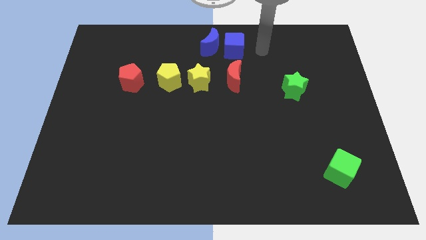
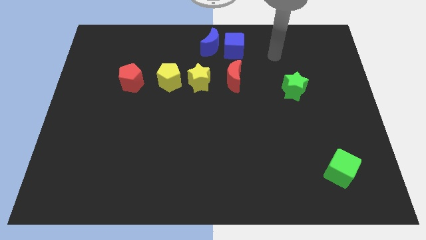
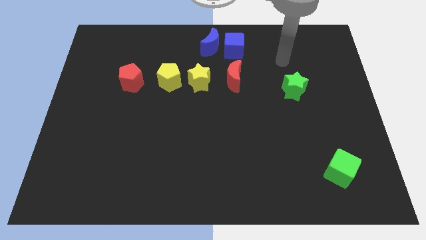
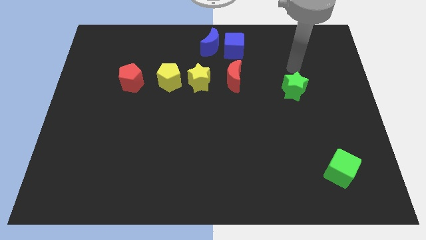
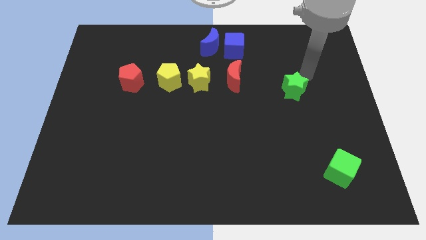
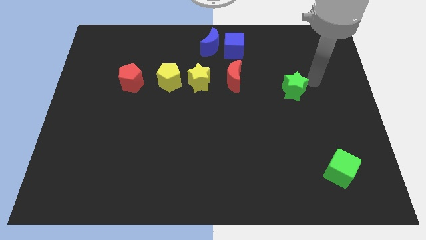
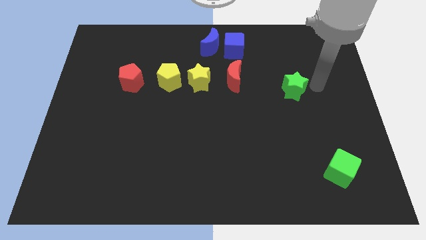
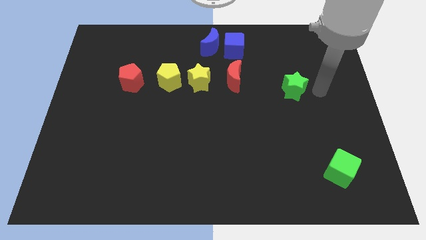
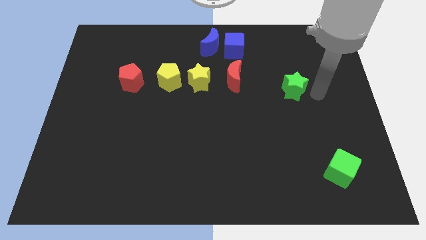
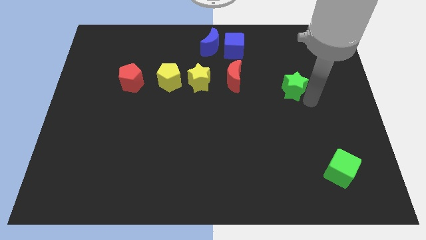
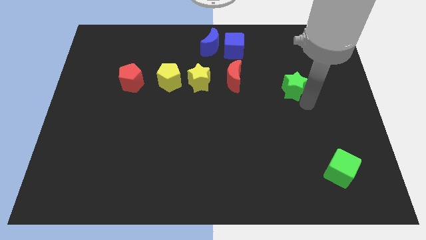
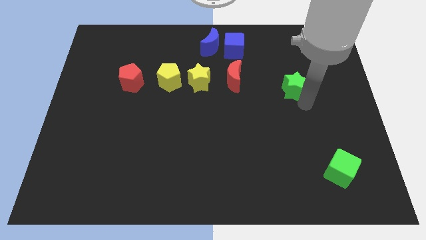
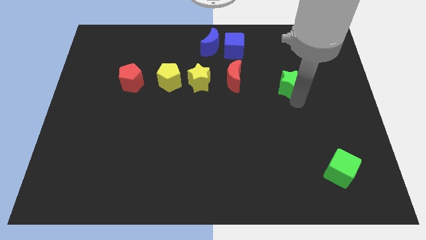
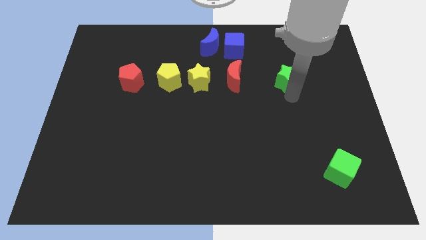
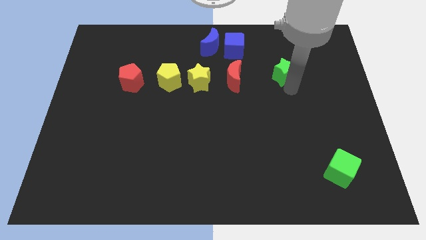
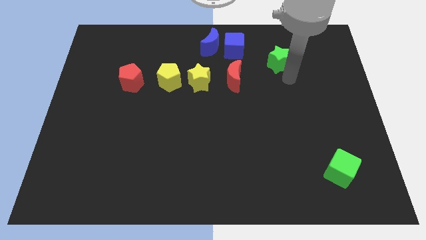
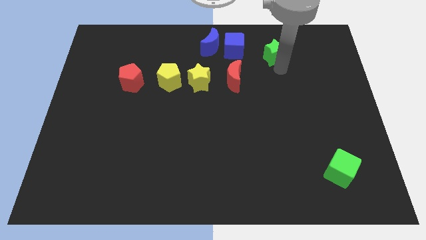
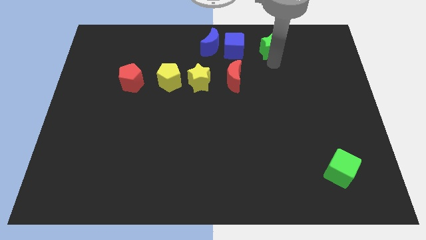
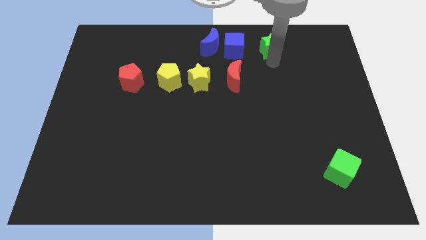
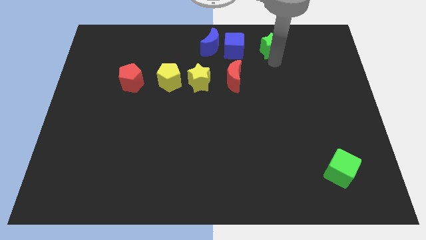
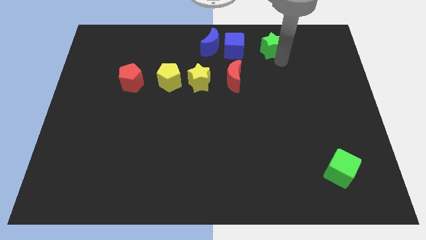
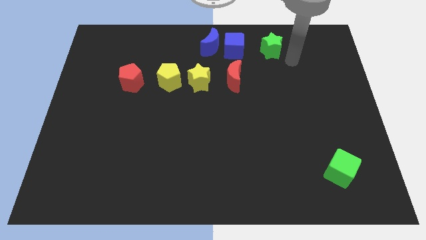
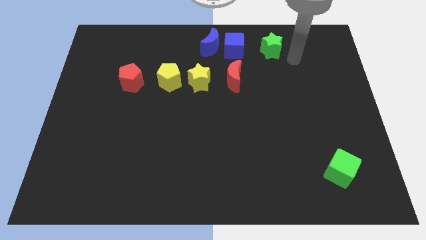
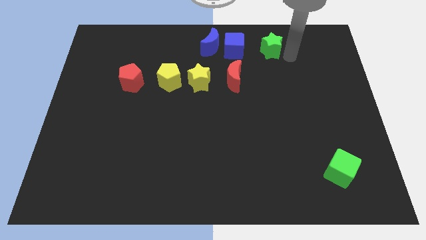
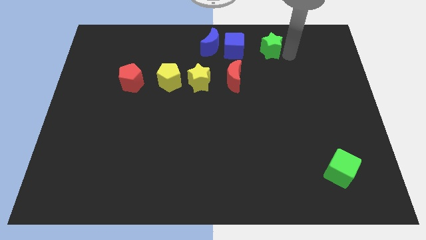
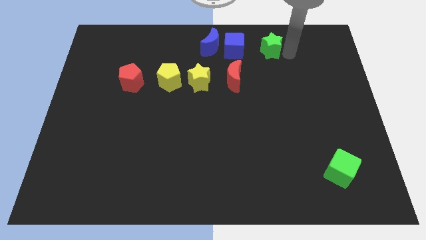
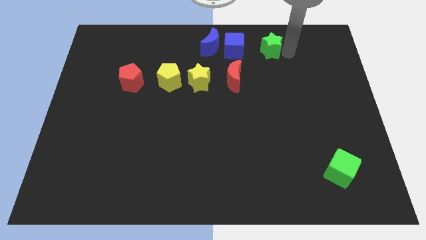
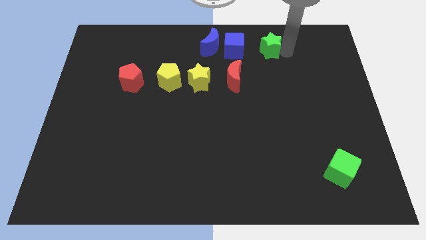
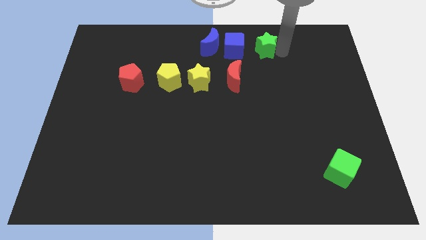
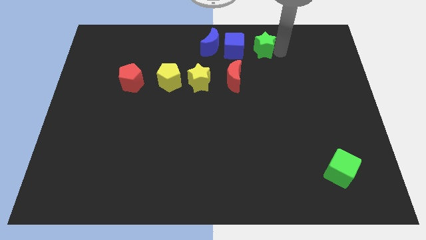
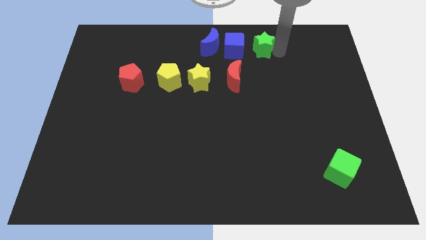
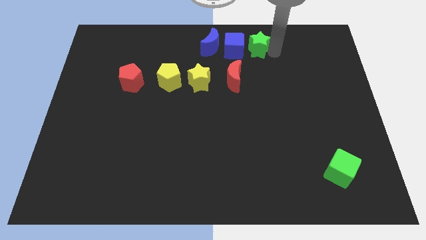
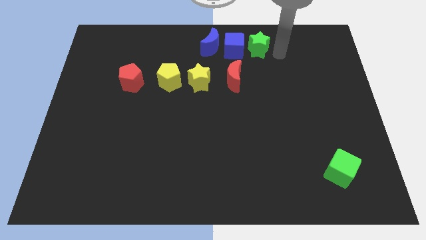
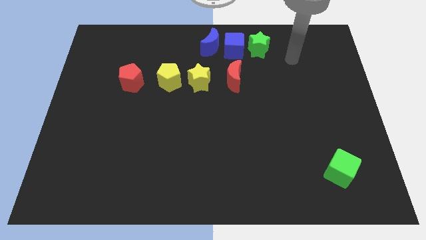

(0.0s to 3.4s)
push the green star to the right of the blue cube

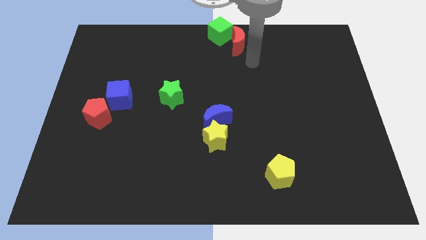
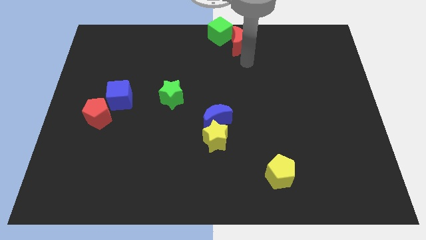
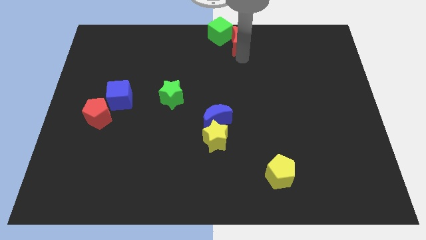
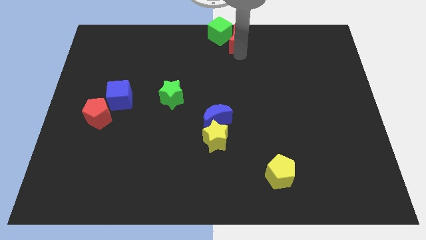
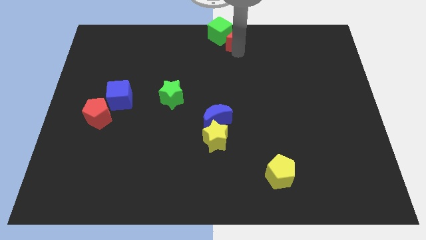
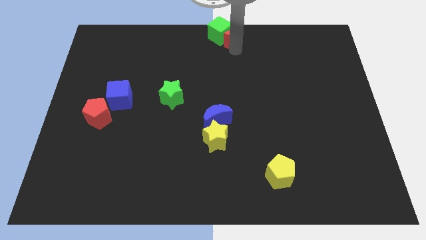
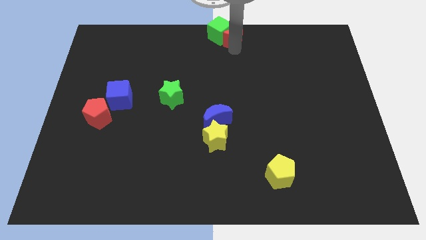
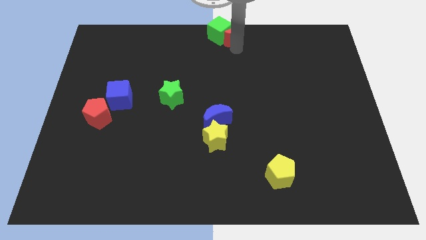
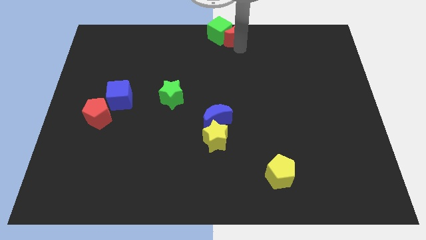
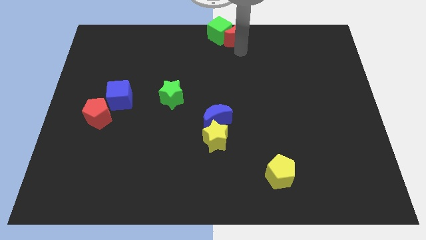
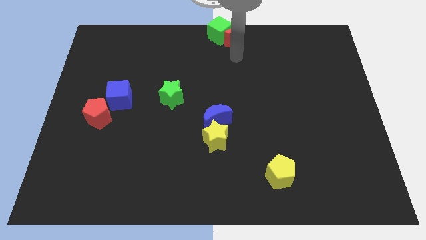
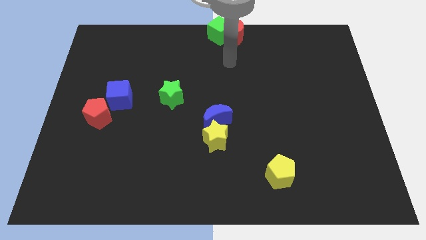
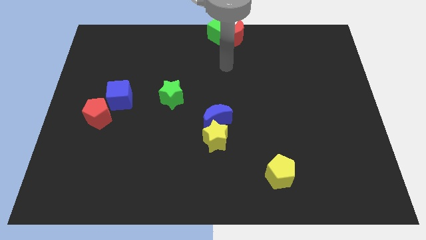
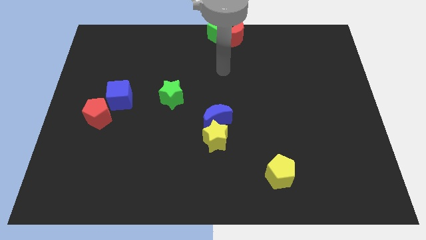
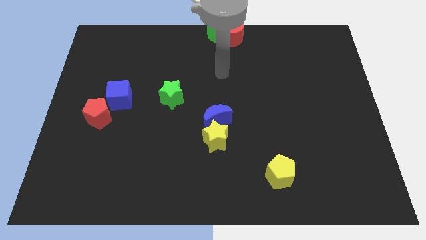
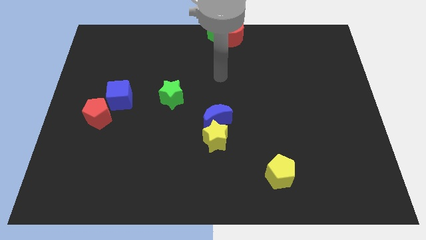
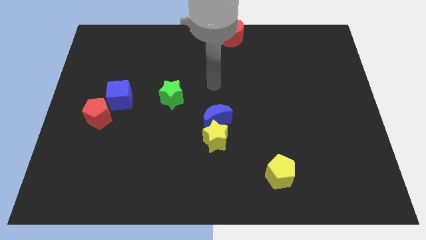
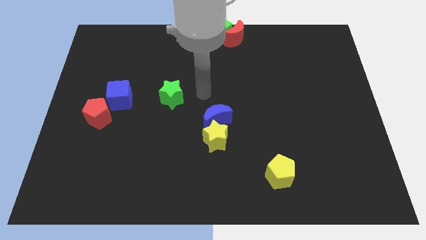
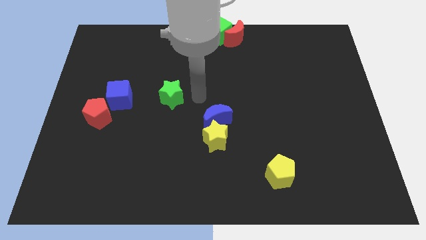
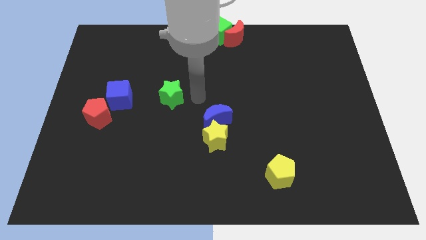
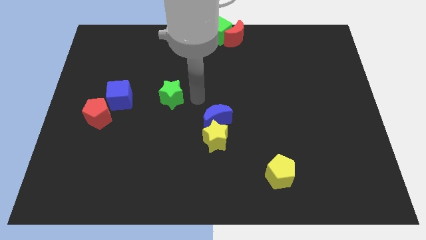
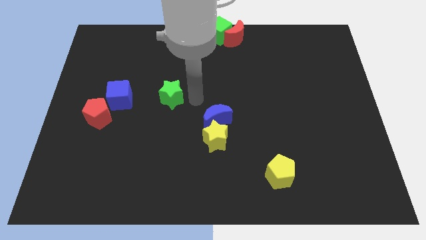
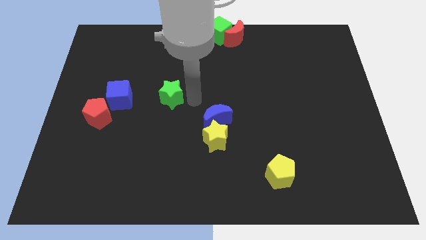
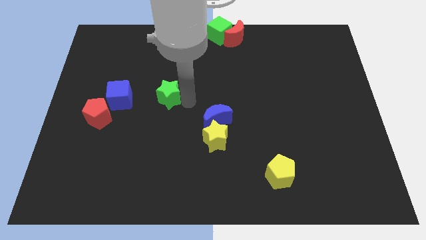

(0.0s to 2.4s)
place the arm right to the green star

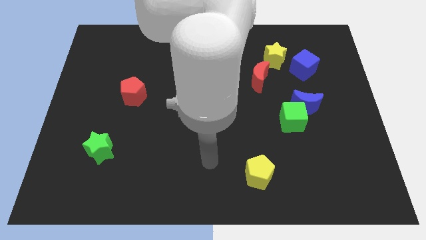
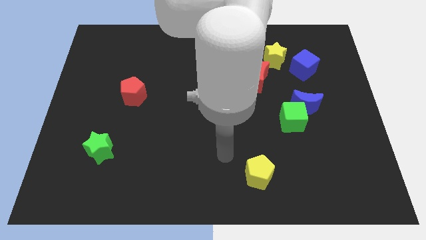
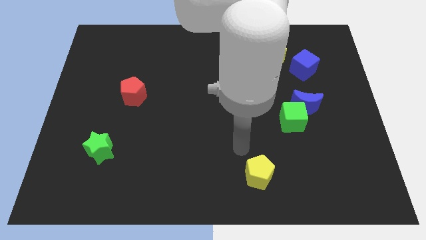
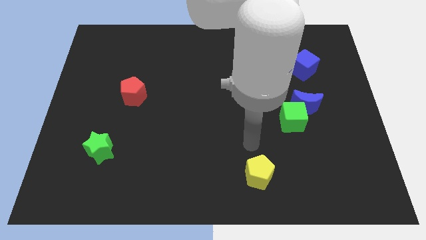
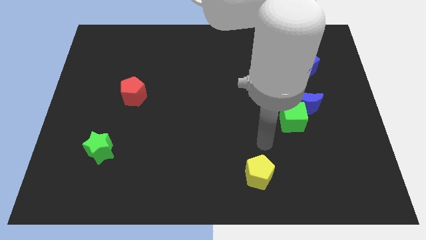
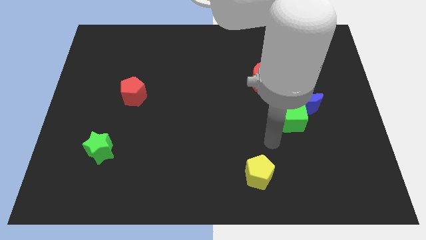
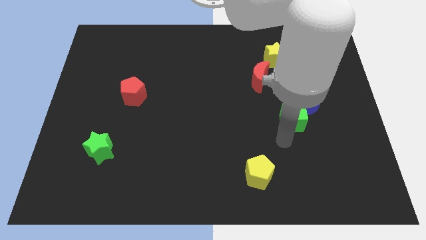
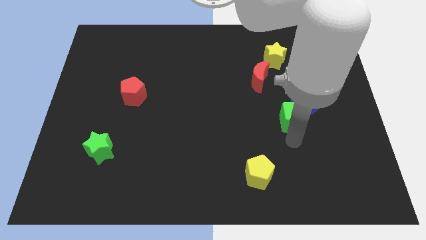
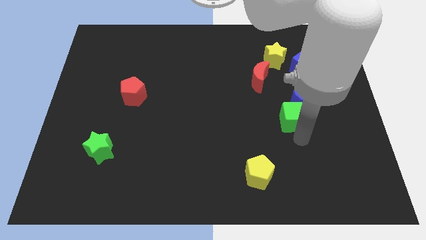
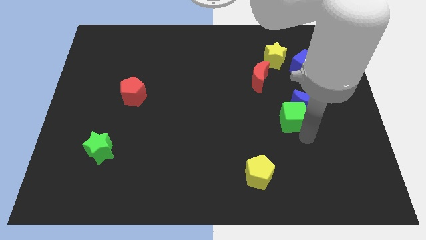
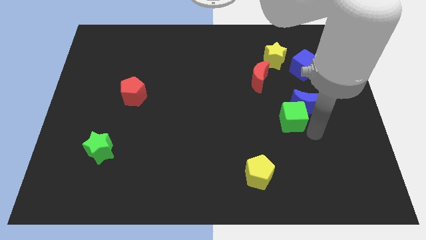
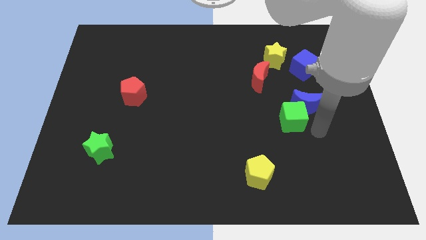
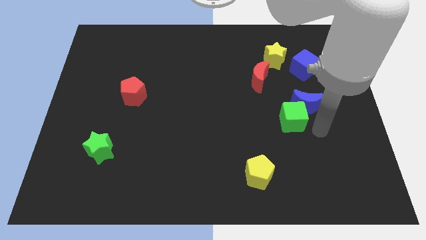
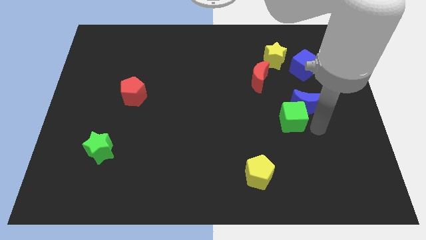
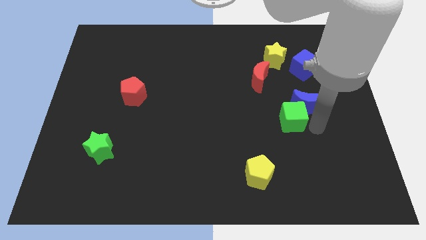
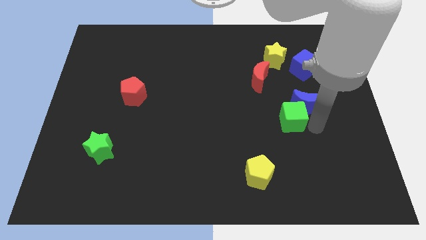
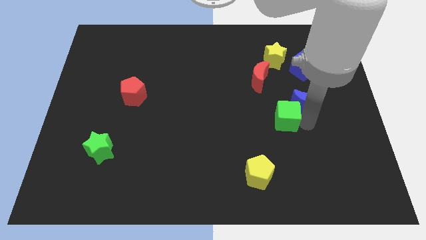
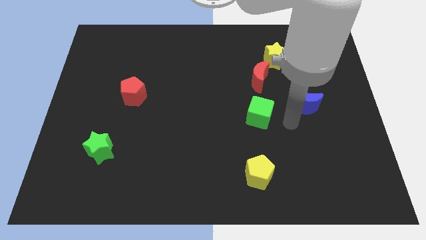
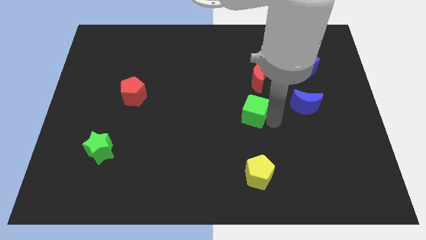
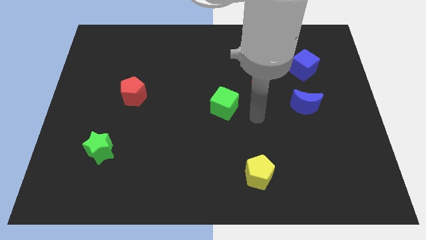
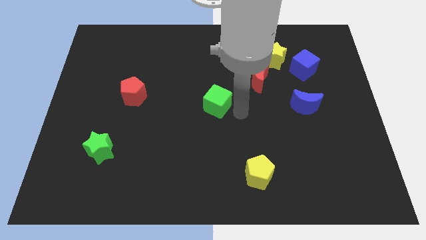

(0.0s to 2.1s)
place the green cube to the center of the board

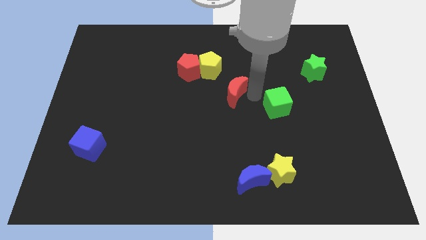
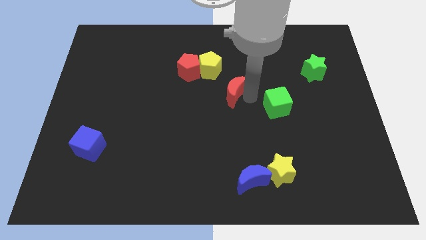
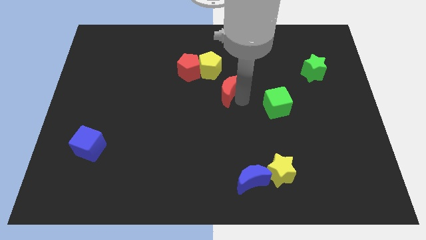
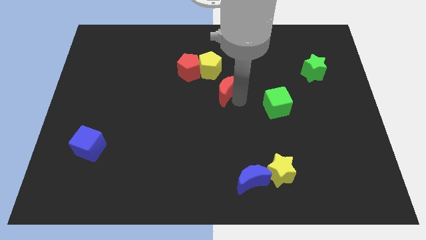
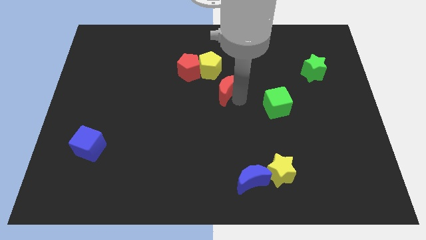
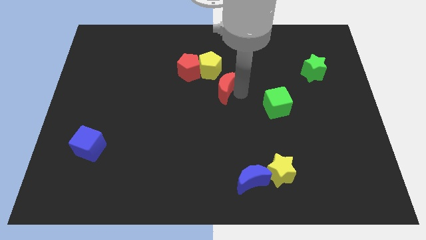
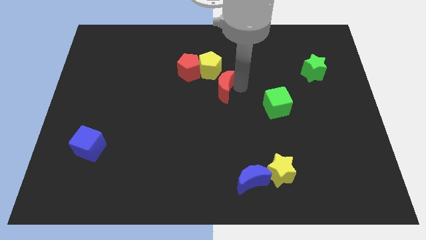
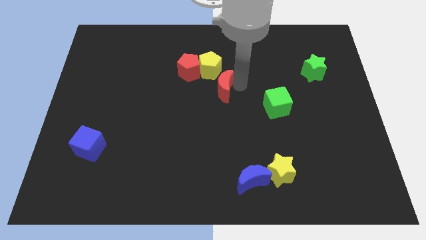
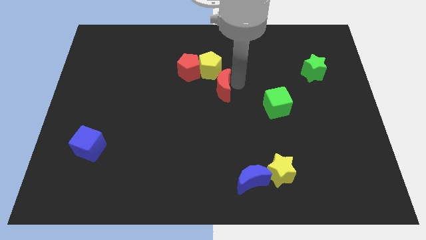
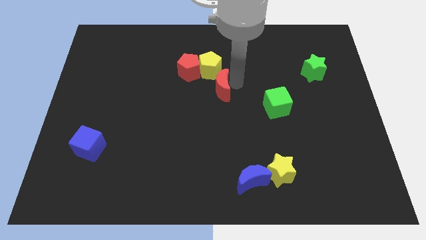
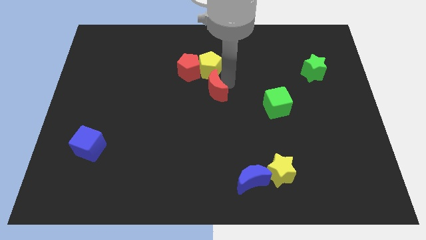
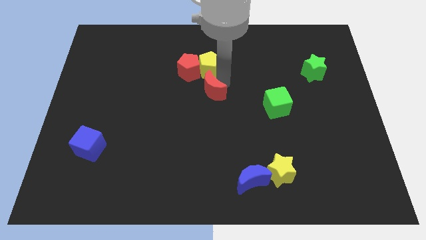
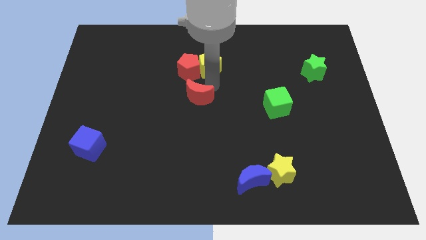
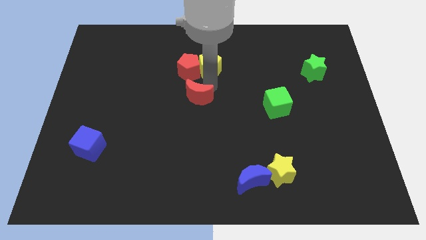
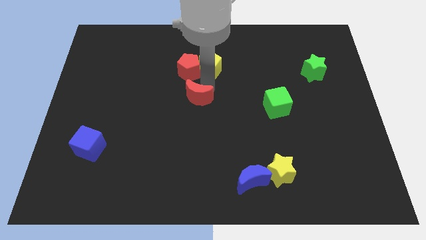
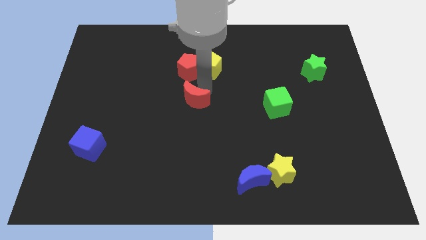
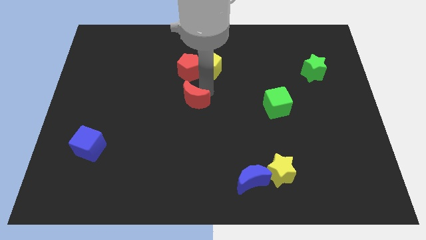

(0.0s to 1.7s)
place the red moon to the bottom side of the red pentagon
